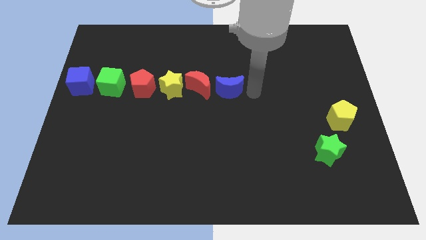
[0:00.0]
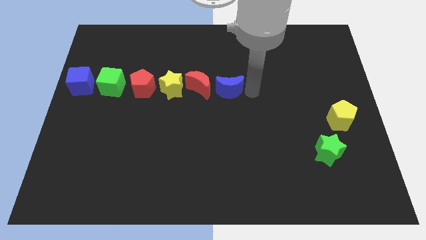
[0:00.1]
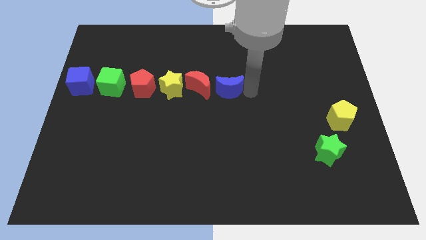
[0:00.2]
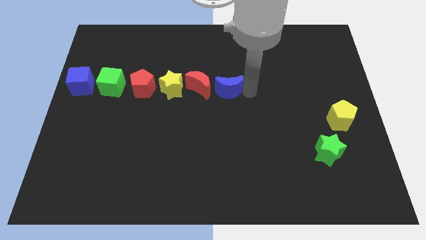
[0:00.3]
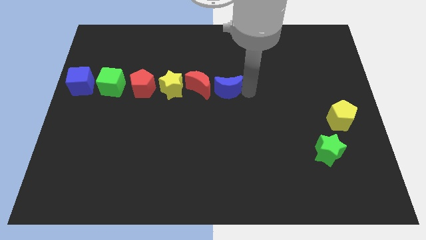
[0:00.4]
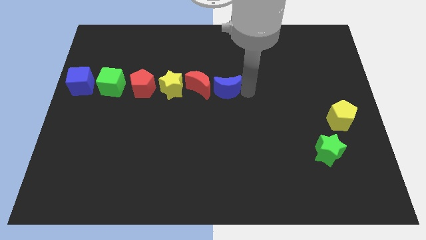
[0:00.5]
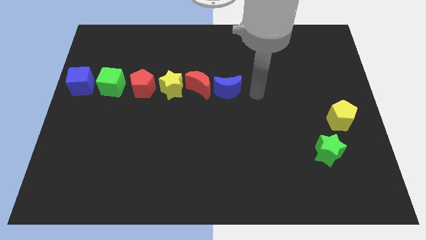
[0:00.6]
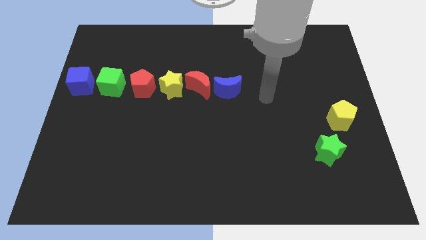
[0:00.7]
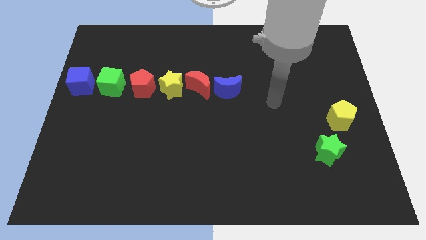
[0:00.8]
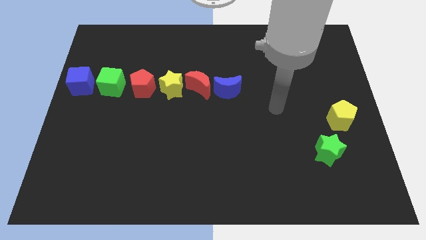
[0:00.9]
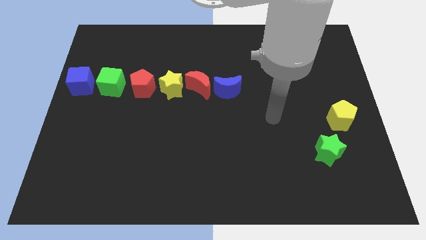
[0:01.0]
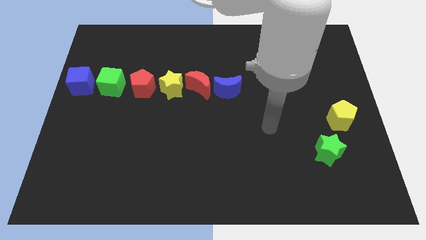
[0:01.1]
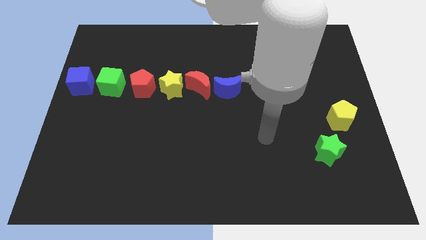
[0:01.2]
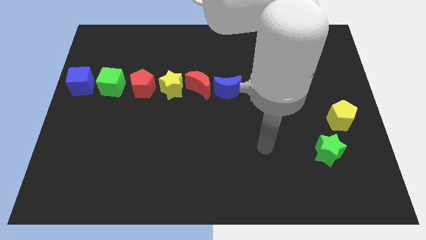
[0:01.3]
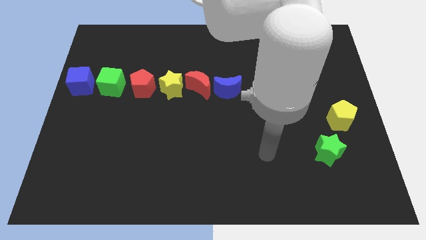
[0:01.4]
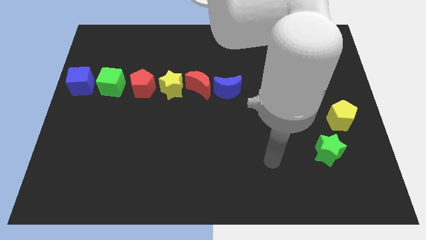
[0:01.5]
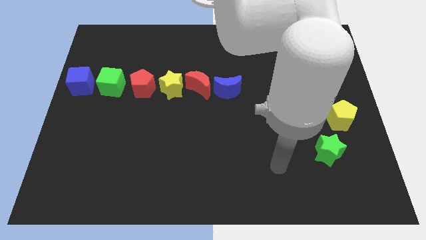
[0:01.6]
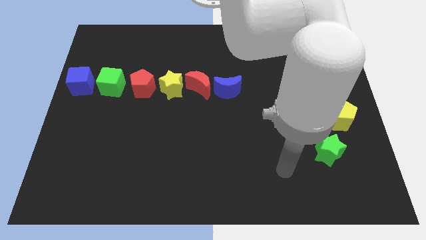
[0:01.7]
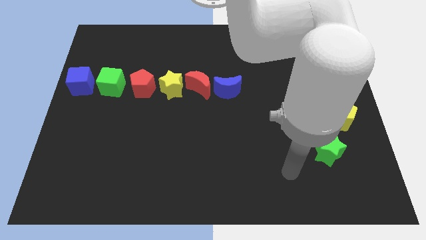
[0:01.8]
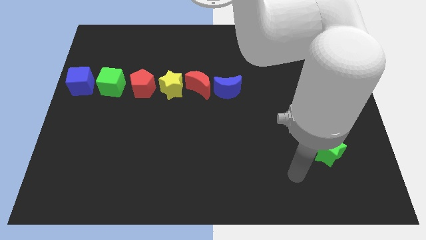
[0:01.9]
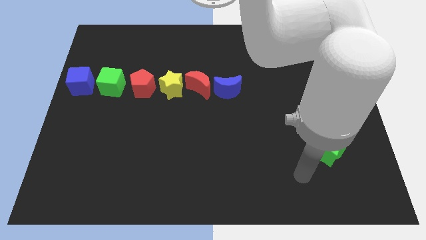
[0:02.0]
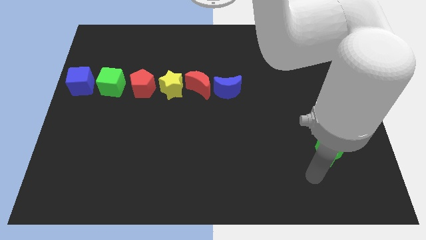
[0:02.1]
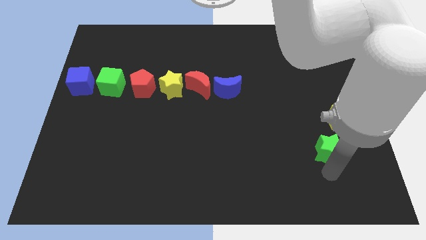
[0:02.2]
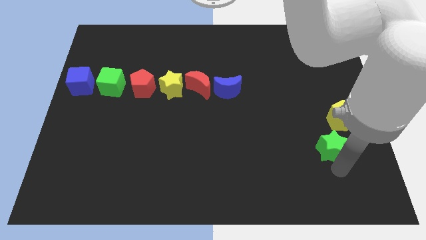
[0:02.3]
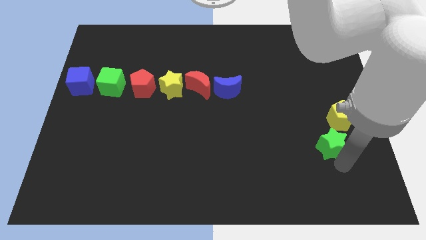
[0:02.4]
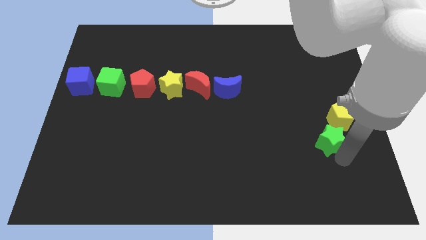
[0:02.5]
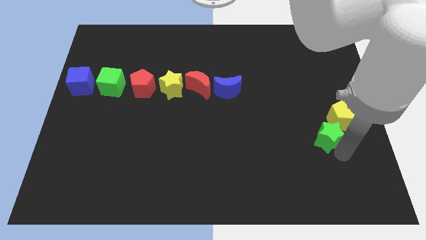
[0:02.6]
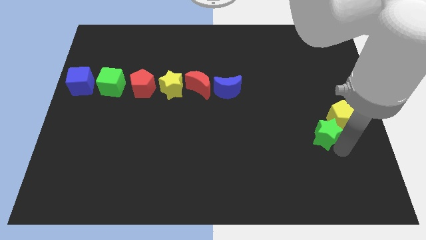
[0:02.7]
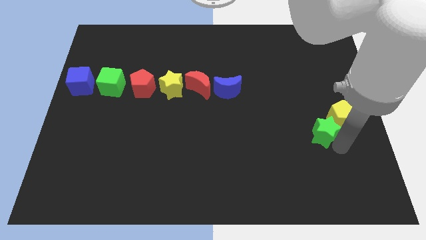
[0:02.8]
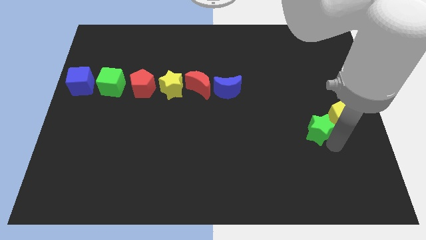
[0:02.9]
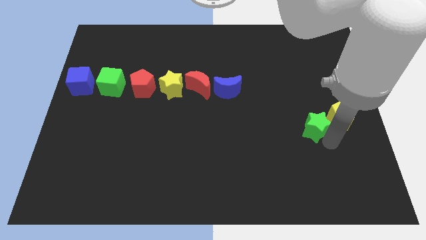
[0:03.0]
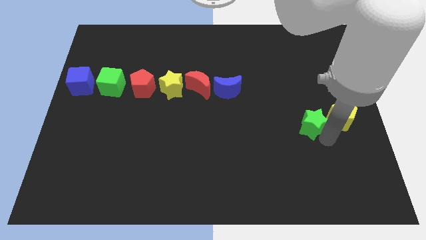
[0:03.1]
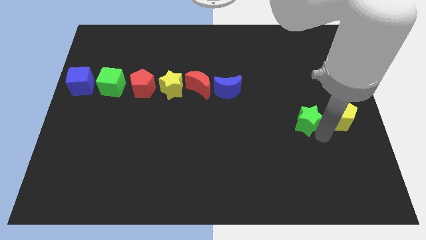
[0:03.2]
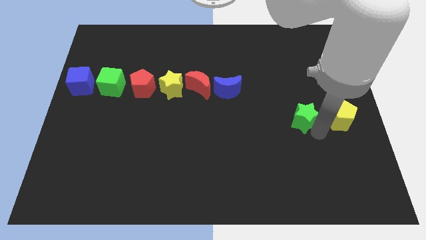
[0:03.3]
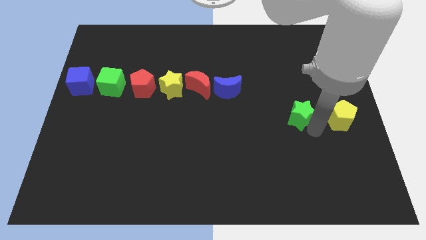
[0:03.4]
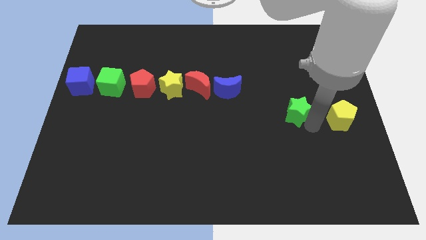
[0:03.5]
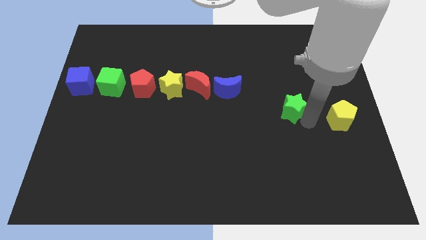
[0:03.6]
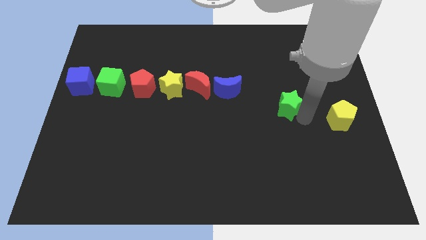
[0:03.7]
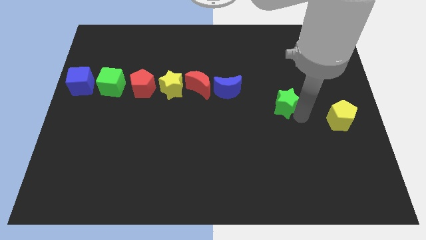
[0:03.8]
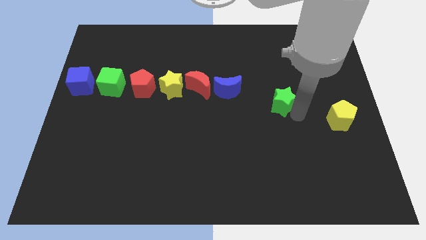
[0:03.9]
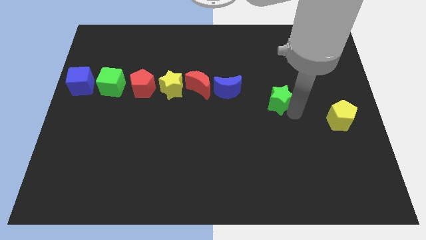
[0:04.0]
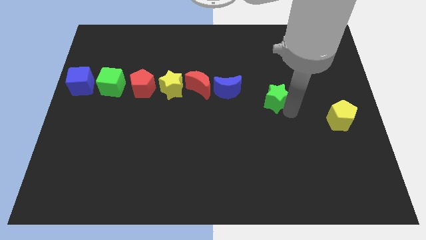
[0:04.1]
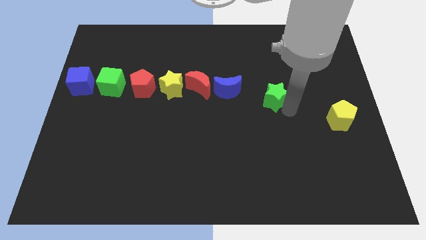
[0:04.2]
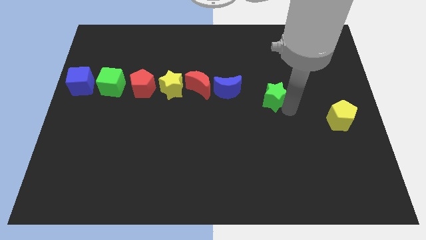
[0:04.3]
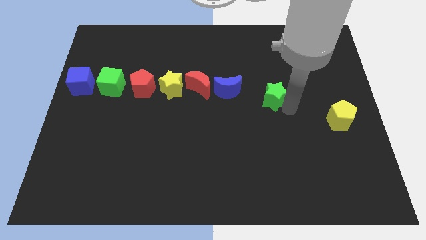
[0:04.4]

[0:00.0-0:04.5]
push the green star towards the blue crescent

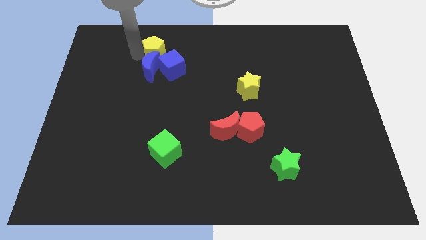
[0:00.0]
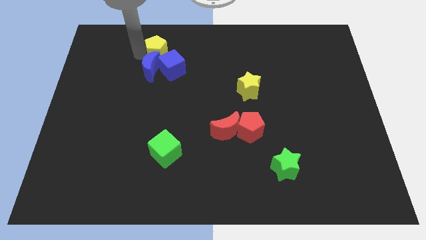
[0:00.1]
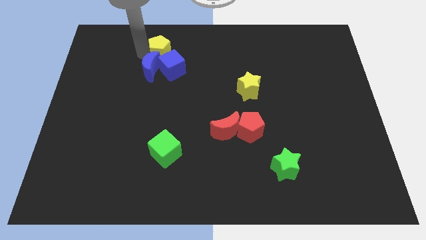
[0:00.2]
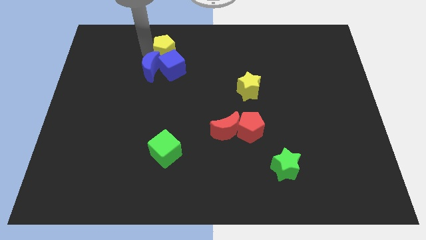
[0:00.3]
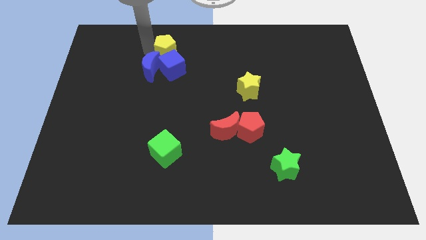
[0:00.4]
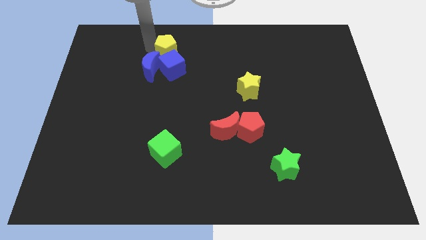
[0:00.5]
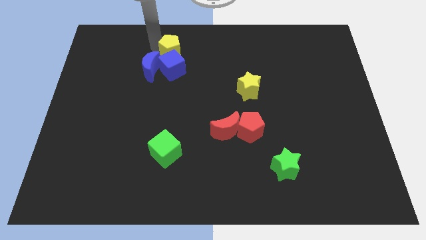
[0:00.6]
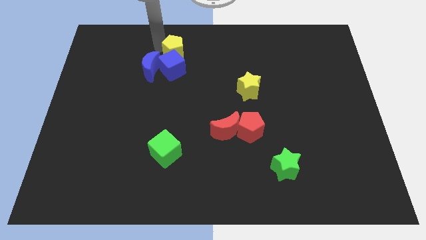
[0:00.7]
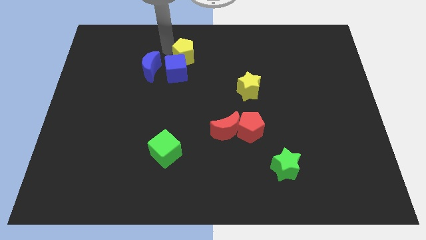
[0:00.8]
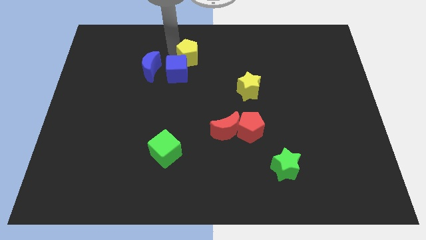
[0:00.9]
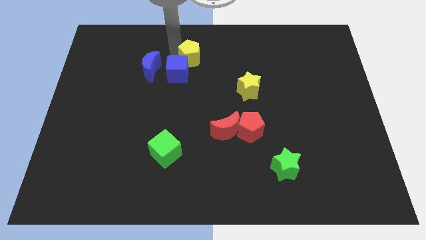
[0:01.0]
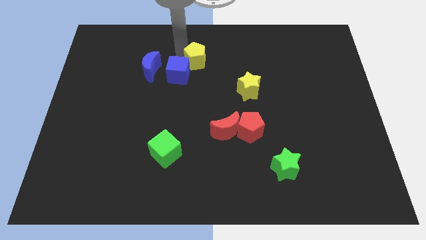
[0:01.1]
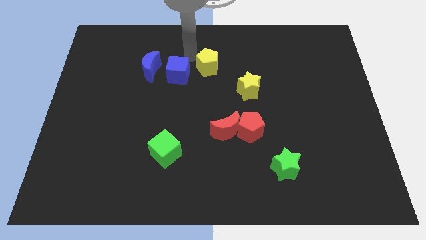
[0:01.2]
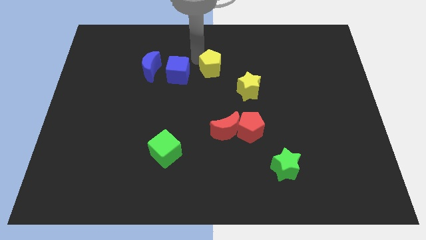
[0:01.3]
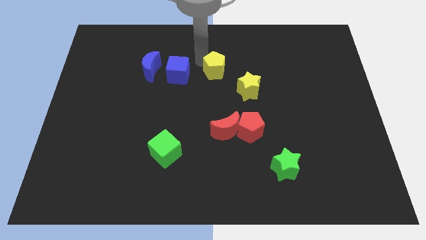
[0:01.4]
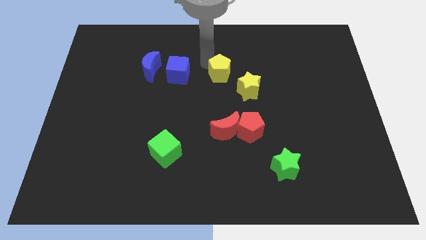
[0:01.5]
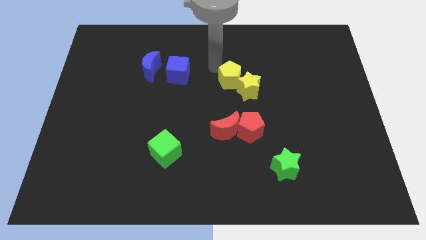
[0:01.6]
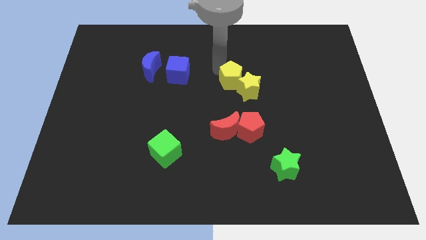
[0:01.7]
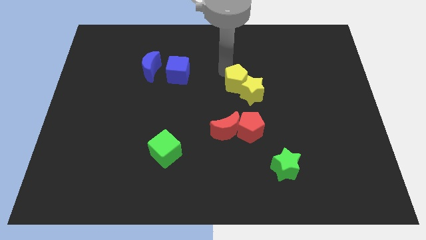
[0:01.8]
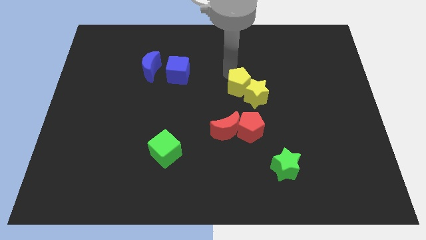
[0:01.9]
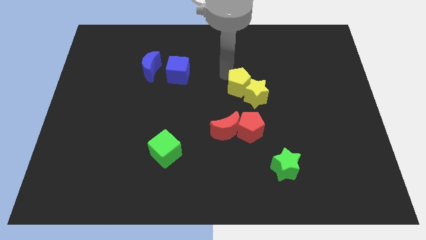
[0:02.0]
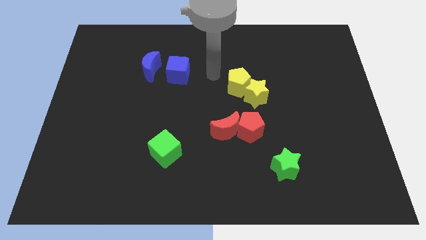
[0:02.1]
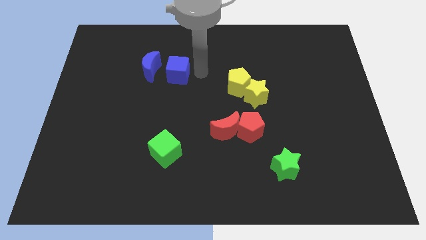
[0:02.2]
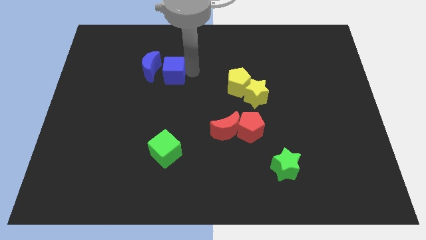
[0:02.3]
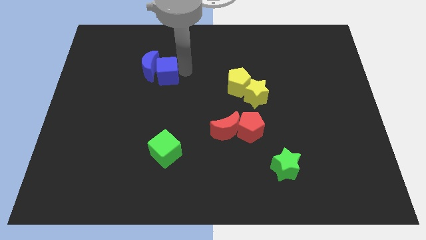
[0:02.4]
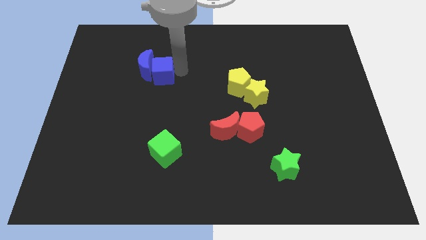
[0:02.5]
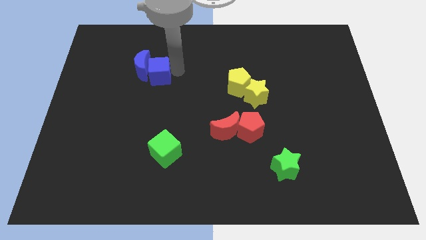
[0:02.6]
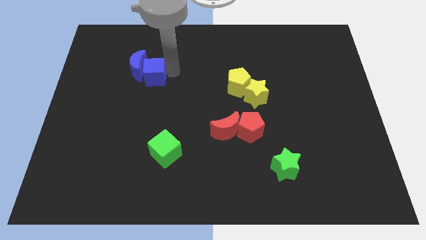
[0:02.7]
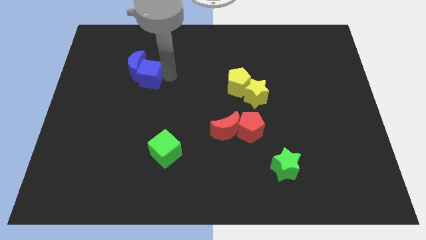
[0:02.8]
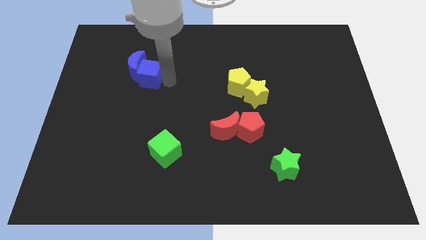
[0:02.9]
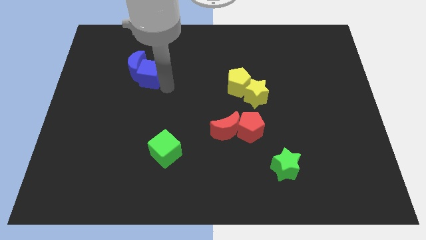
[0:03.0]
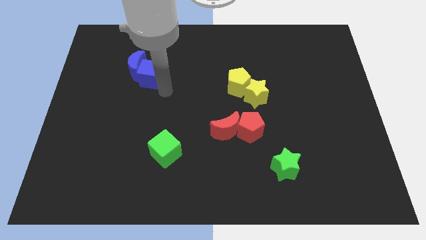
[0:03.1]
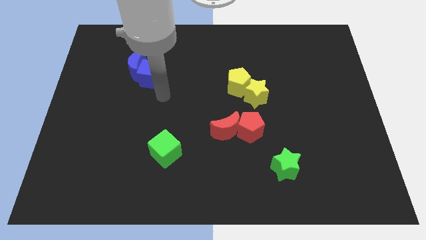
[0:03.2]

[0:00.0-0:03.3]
slightly move the blue blocks towards the left

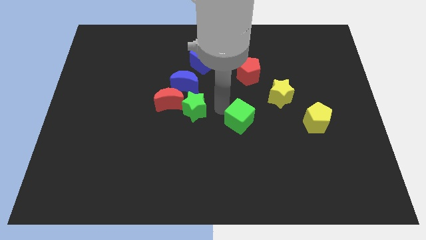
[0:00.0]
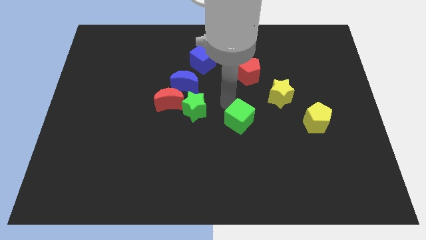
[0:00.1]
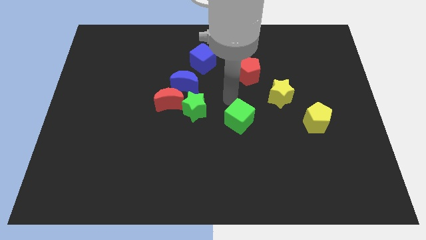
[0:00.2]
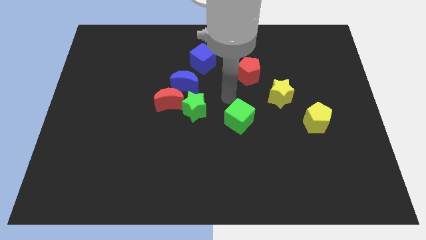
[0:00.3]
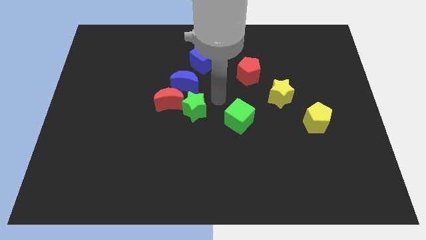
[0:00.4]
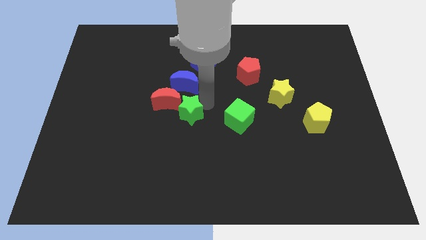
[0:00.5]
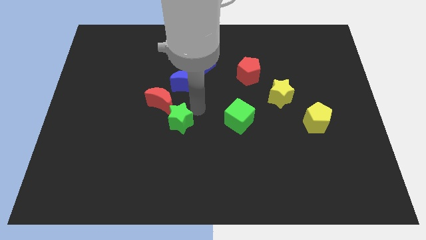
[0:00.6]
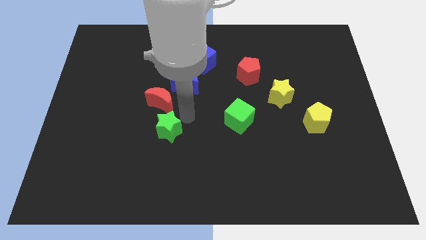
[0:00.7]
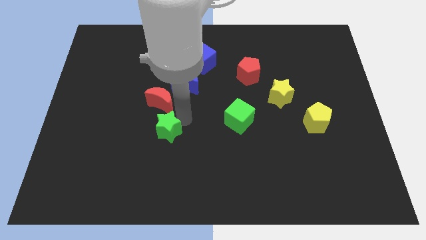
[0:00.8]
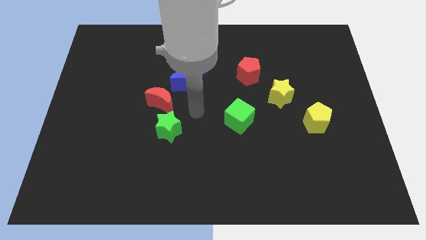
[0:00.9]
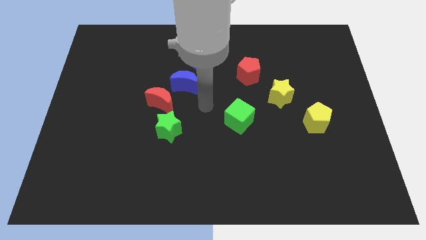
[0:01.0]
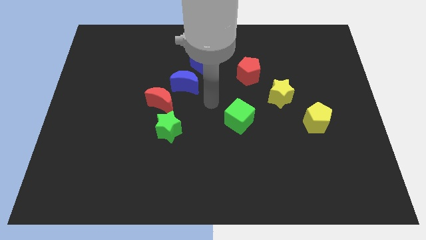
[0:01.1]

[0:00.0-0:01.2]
push green star to the bottom right to the red crescent
